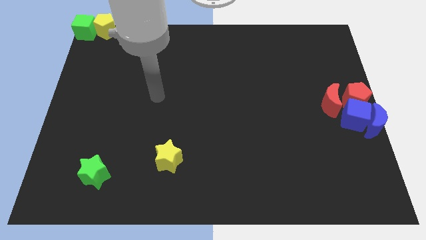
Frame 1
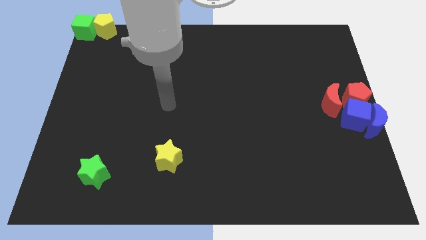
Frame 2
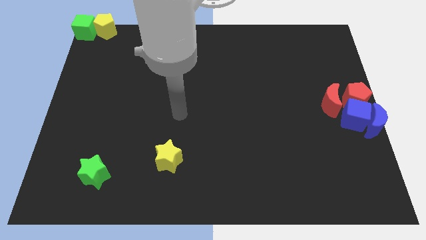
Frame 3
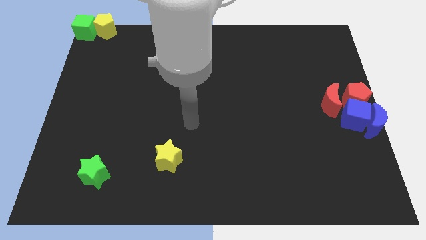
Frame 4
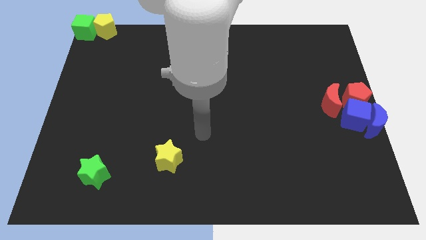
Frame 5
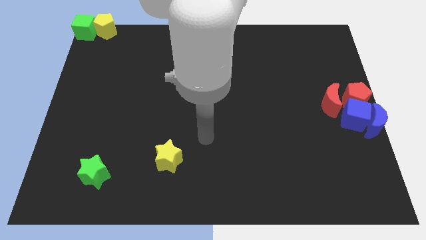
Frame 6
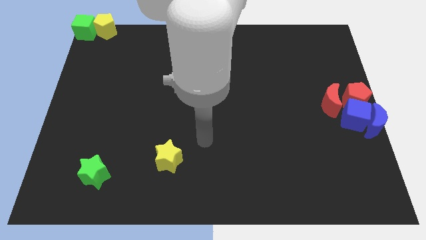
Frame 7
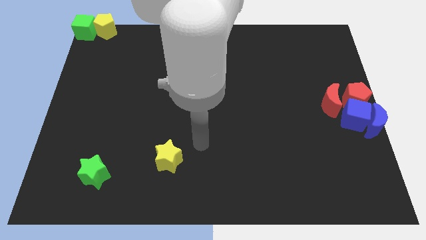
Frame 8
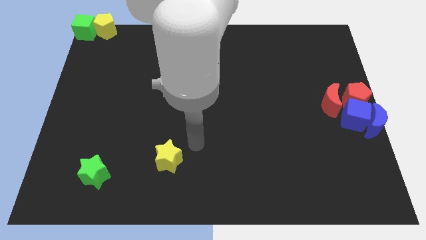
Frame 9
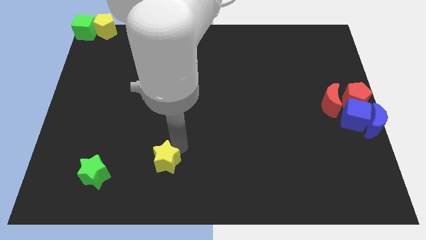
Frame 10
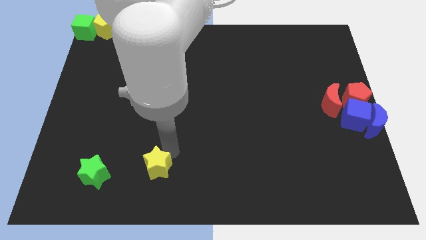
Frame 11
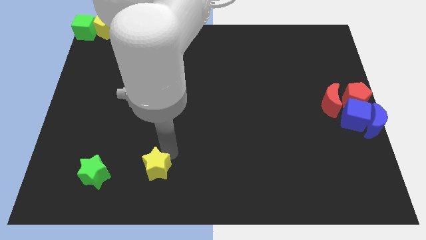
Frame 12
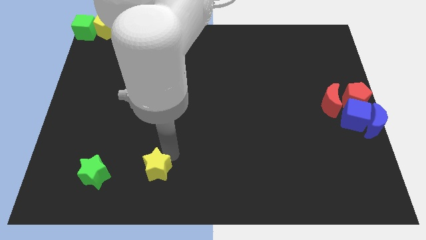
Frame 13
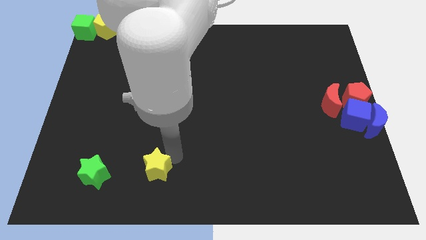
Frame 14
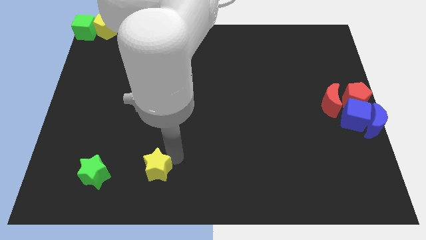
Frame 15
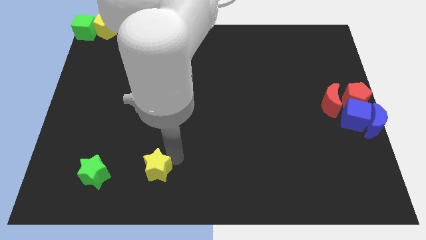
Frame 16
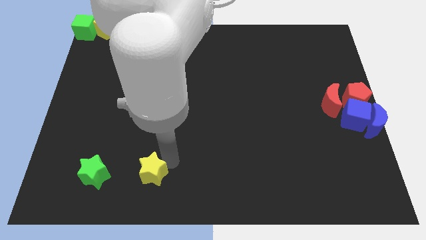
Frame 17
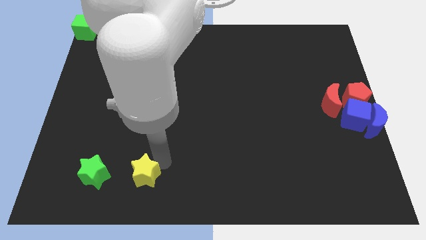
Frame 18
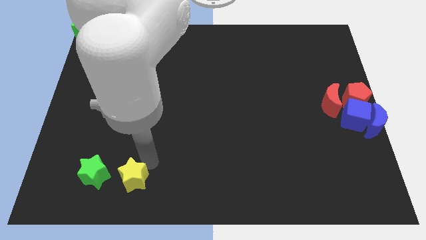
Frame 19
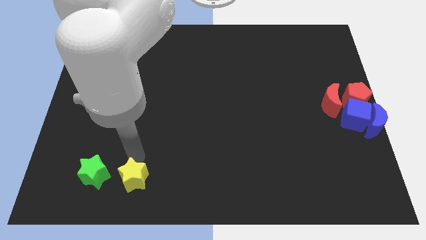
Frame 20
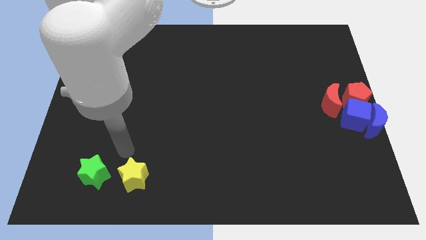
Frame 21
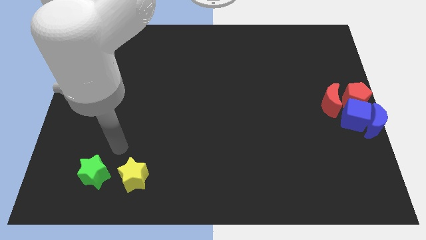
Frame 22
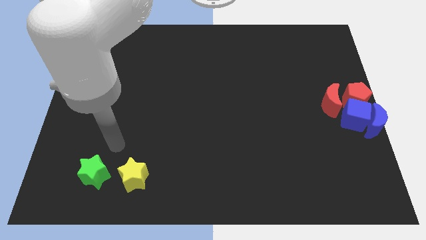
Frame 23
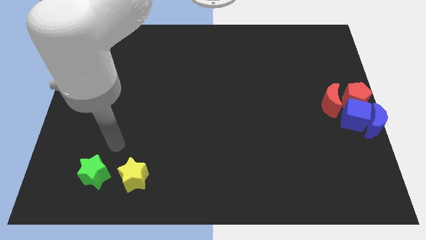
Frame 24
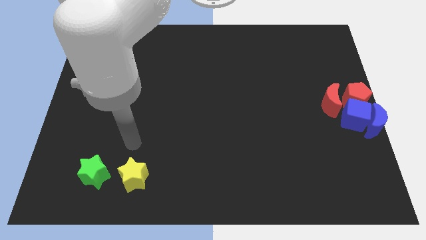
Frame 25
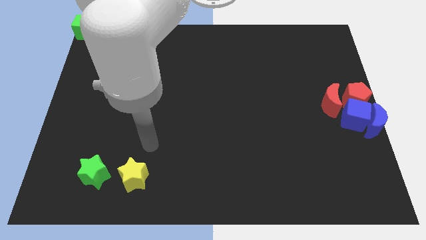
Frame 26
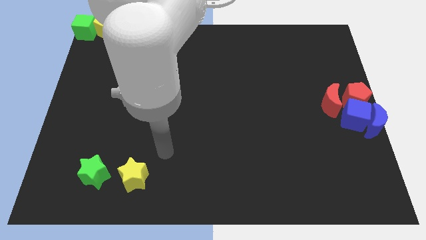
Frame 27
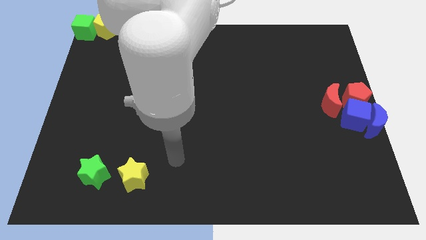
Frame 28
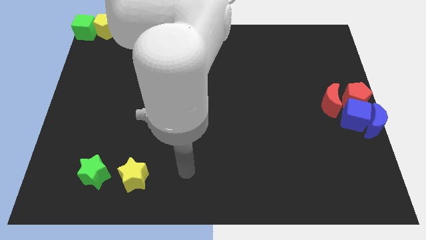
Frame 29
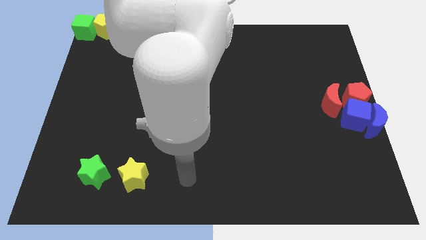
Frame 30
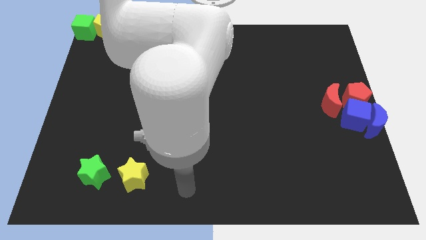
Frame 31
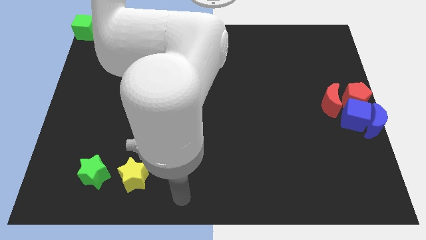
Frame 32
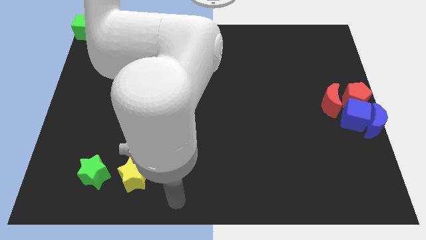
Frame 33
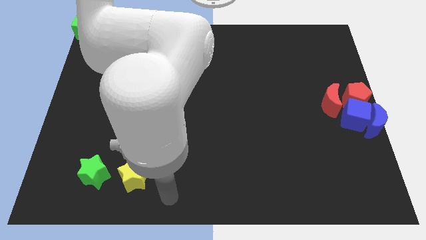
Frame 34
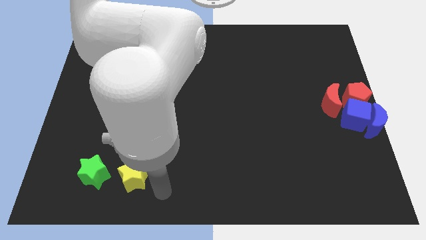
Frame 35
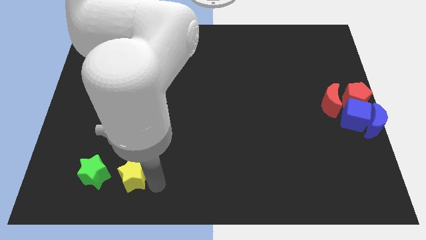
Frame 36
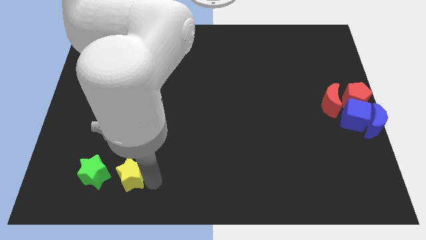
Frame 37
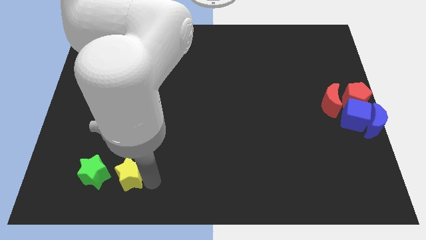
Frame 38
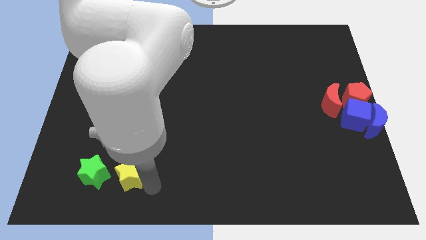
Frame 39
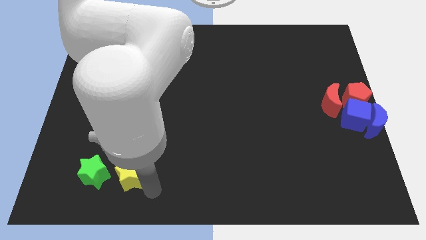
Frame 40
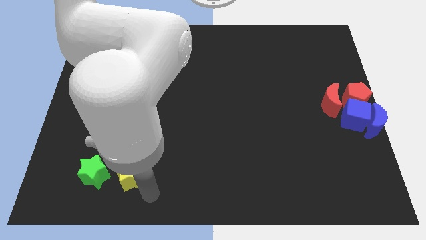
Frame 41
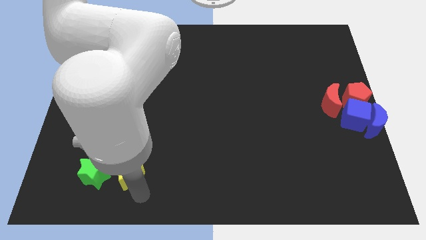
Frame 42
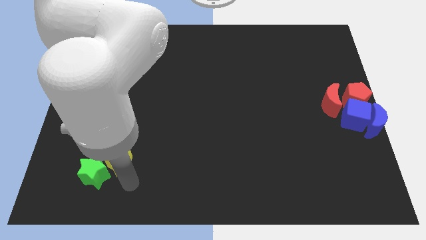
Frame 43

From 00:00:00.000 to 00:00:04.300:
push the yellow star to the right side of green star

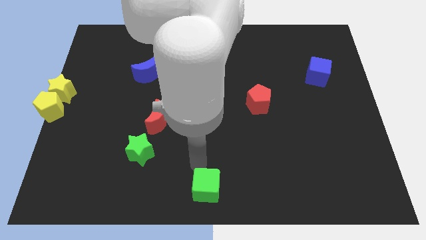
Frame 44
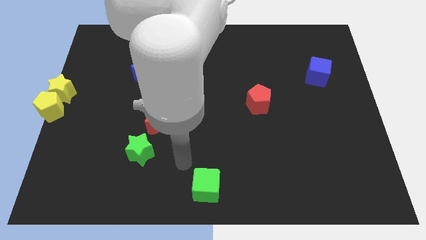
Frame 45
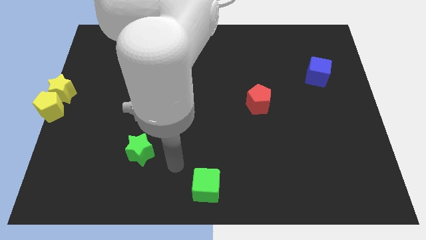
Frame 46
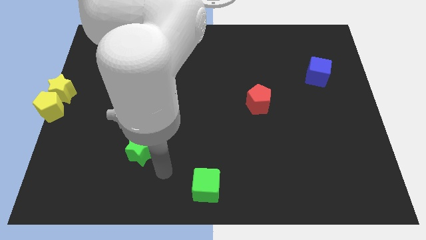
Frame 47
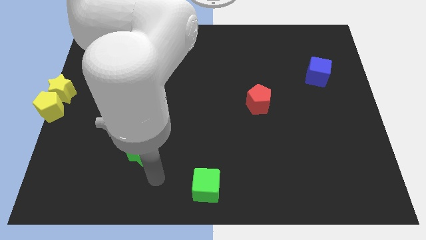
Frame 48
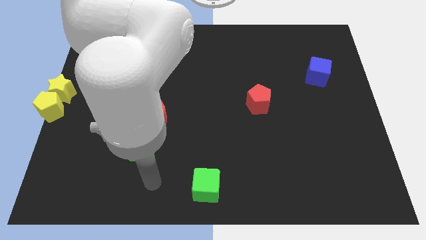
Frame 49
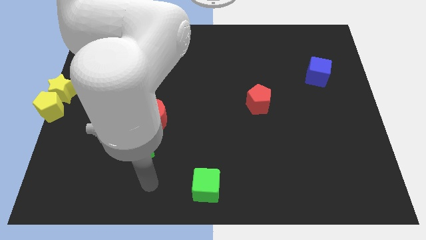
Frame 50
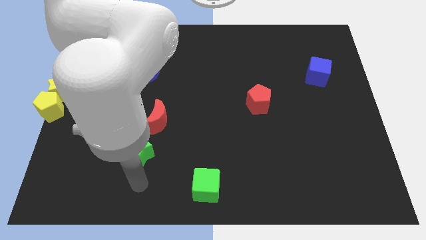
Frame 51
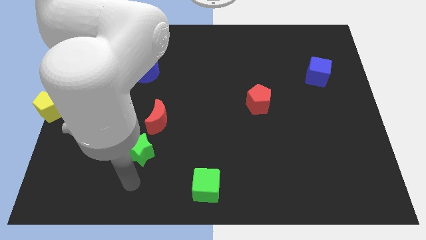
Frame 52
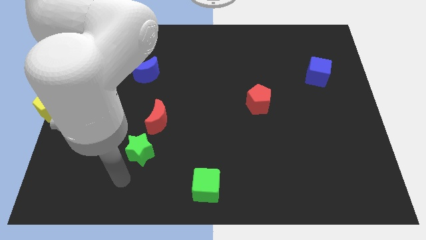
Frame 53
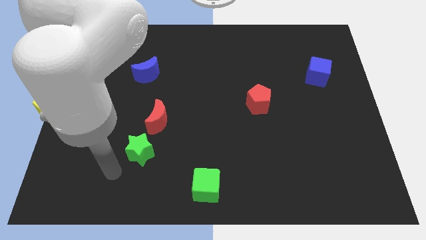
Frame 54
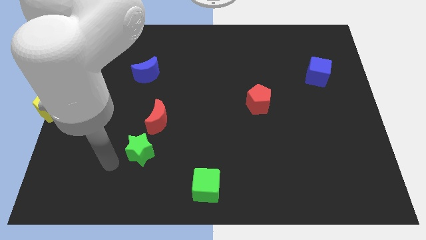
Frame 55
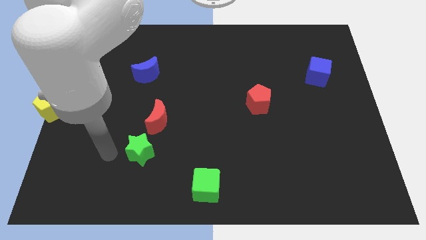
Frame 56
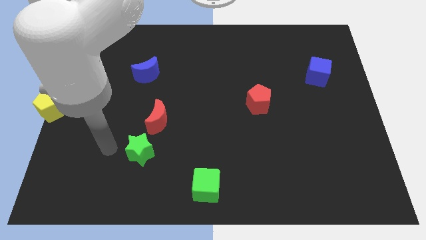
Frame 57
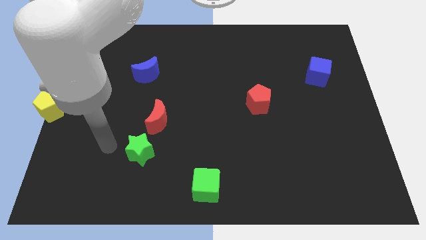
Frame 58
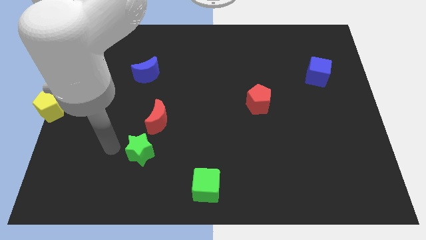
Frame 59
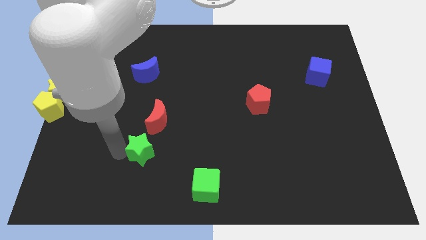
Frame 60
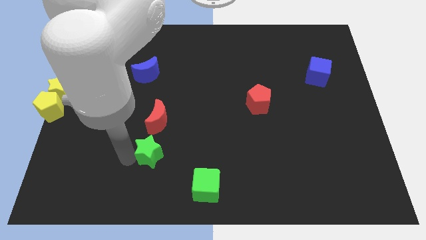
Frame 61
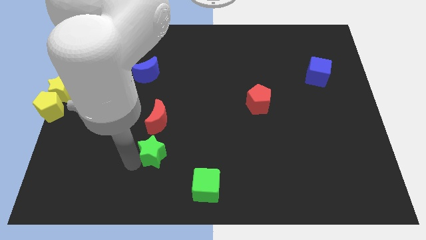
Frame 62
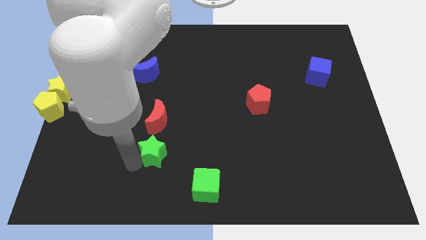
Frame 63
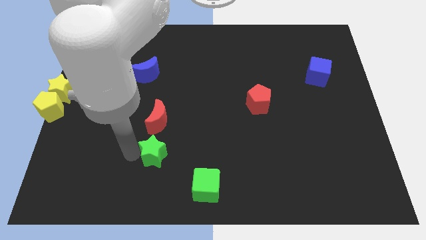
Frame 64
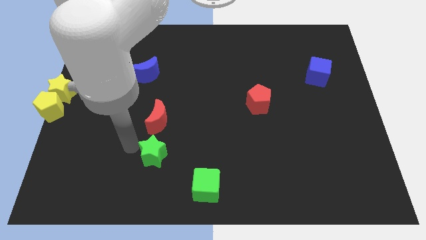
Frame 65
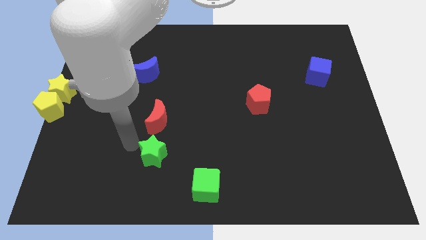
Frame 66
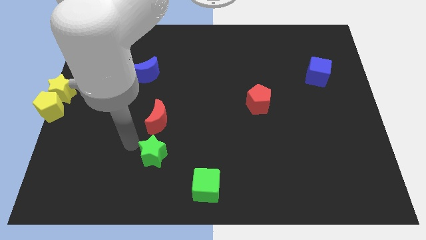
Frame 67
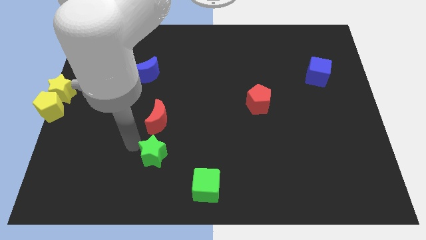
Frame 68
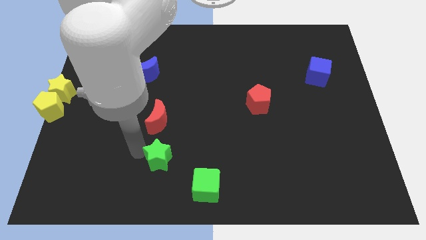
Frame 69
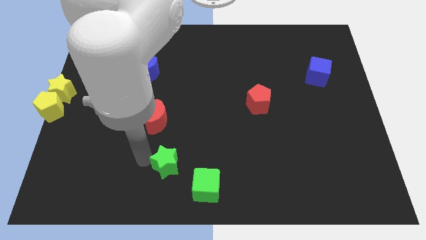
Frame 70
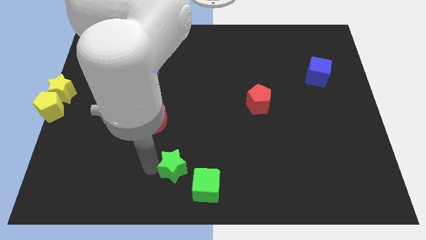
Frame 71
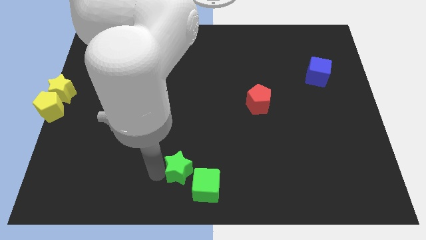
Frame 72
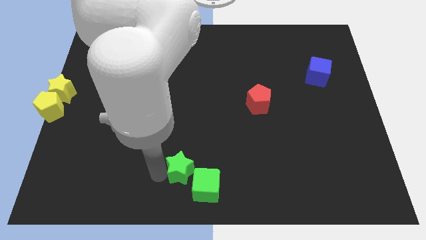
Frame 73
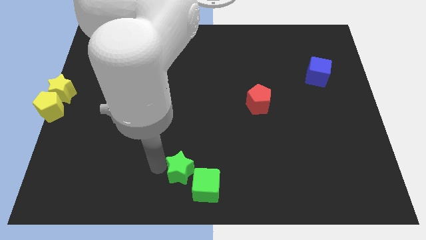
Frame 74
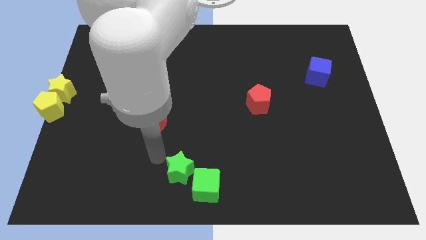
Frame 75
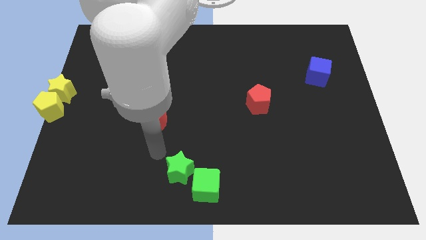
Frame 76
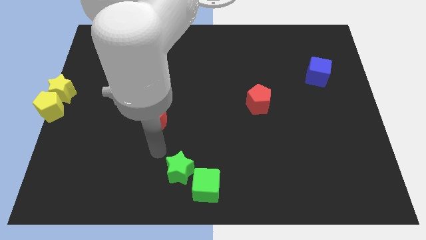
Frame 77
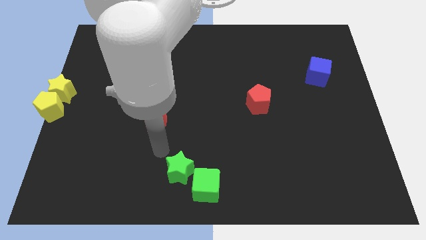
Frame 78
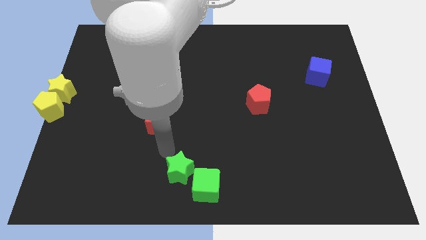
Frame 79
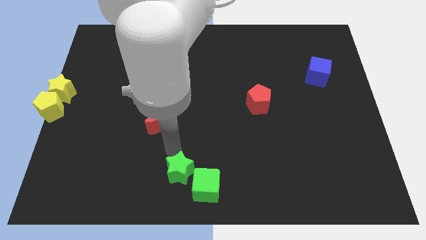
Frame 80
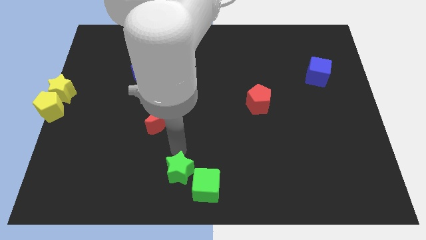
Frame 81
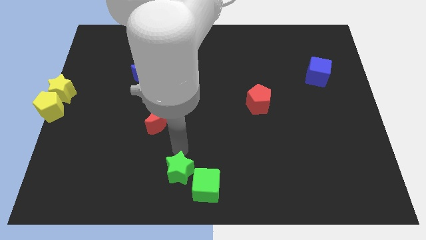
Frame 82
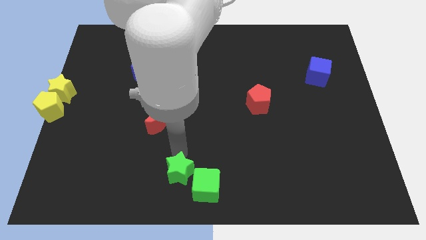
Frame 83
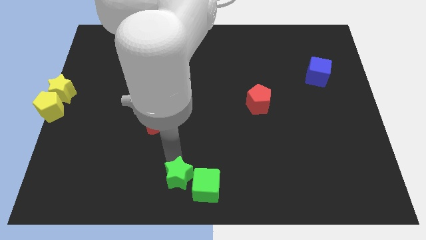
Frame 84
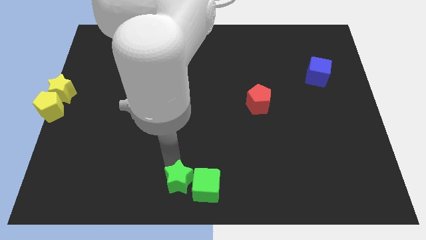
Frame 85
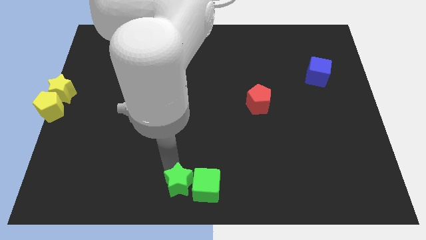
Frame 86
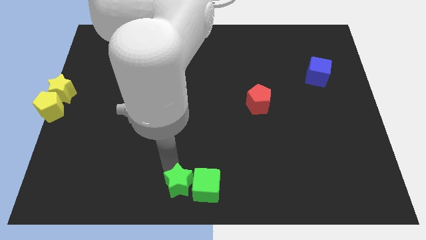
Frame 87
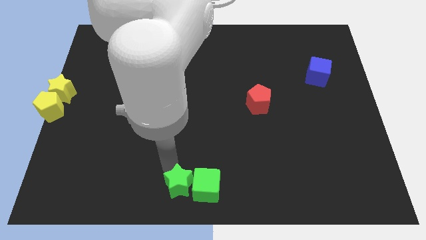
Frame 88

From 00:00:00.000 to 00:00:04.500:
slide the green star into the left side of the green cube
